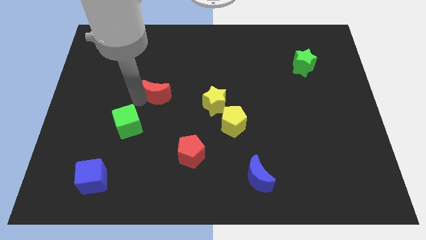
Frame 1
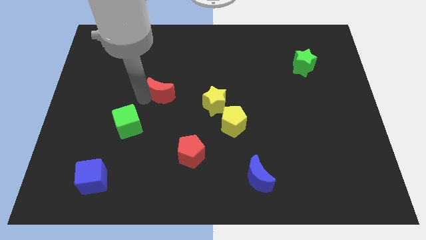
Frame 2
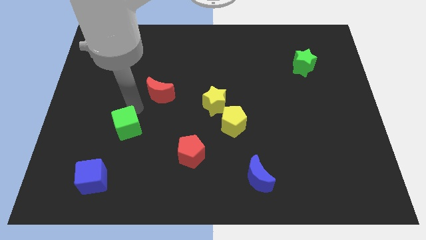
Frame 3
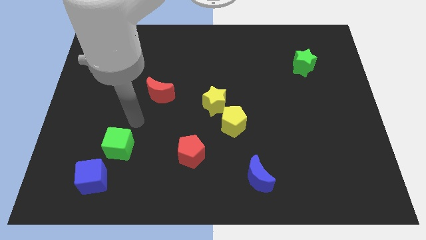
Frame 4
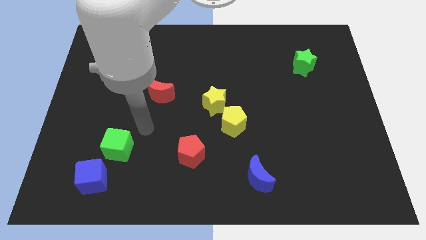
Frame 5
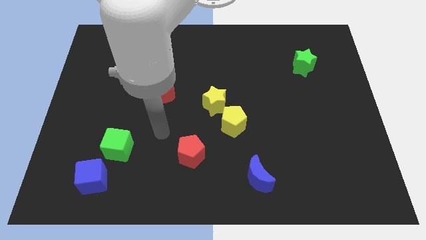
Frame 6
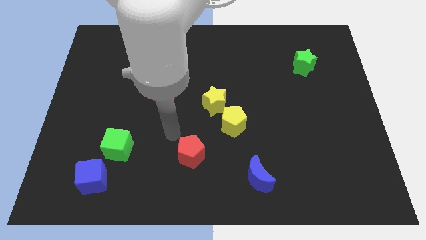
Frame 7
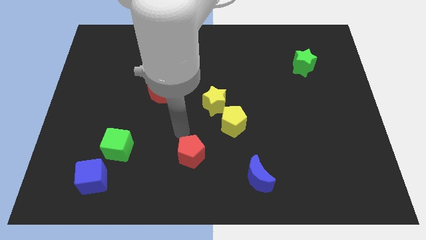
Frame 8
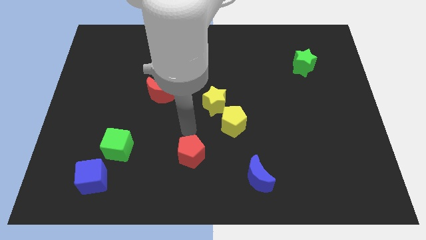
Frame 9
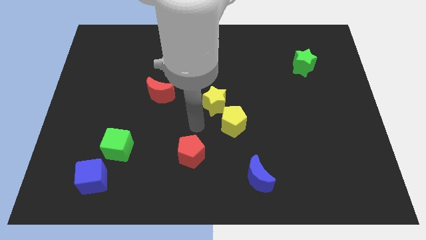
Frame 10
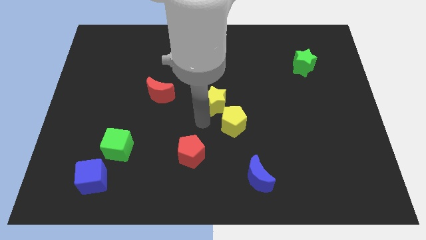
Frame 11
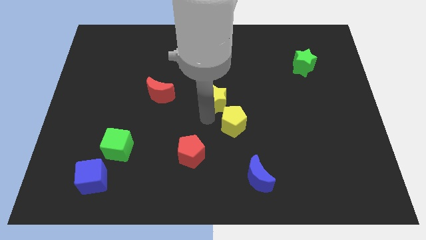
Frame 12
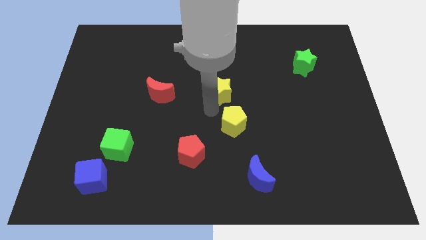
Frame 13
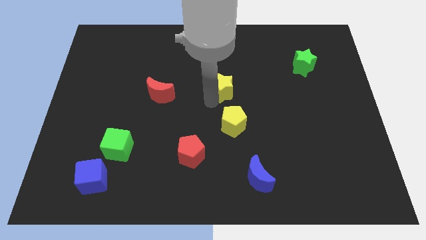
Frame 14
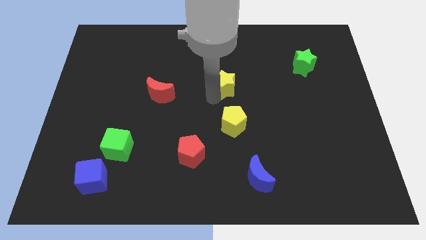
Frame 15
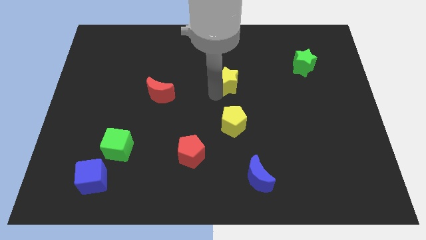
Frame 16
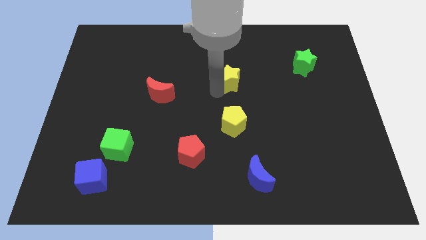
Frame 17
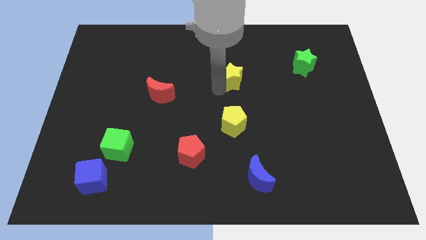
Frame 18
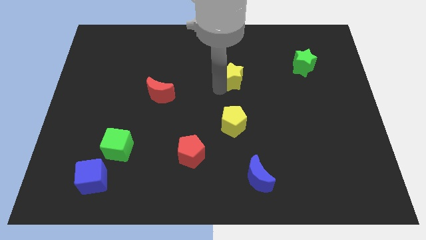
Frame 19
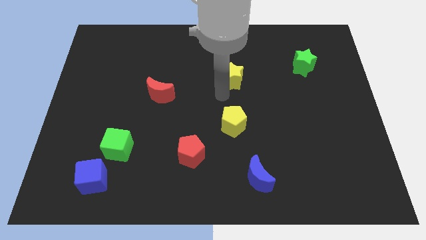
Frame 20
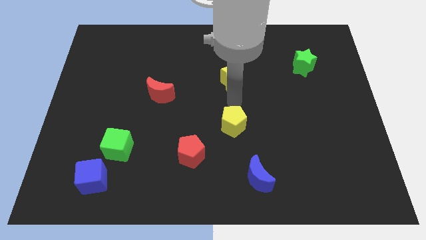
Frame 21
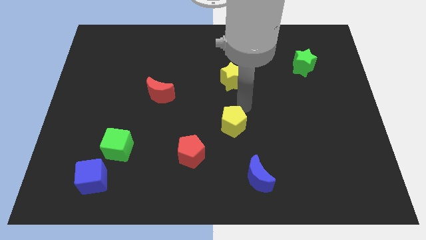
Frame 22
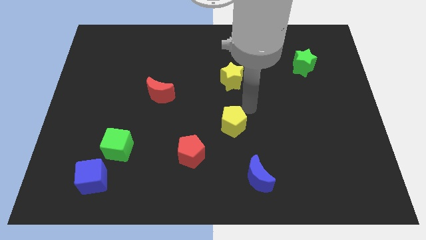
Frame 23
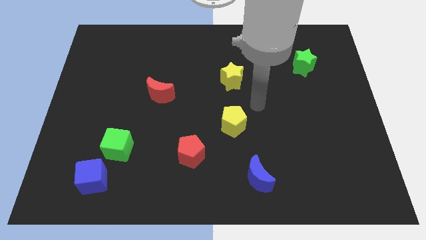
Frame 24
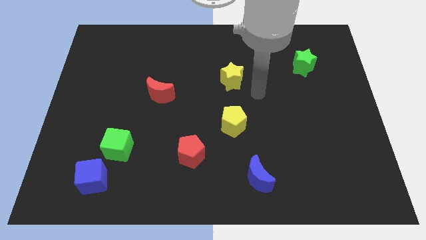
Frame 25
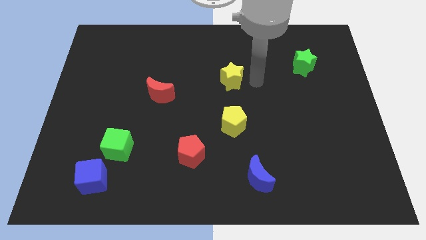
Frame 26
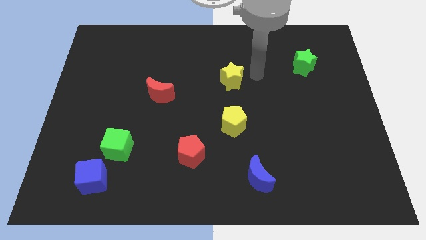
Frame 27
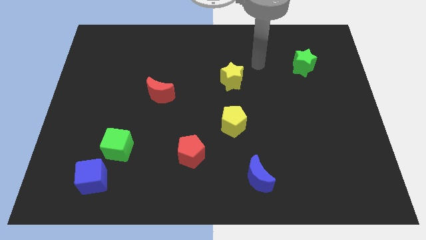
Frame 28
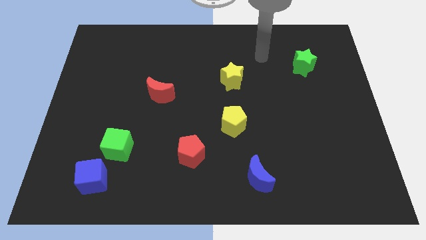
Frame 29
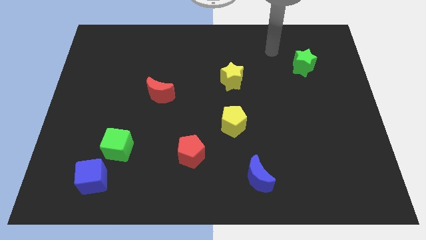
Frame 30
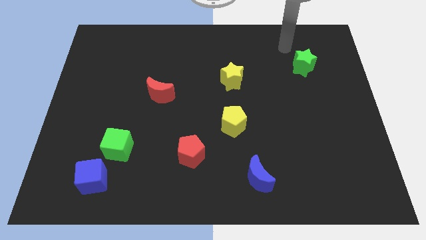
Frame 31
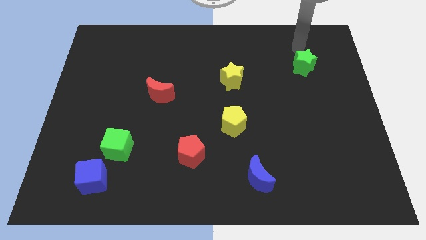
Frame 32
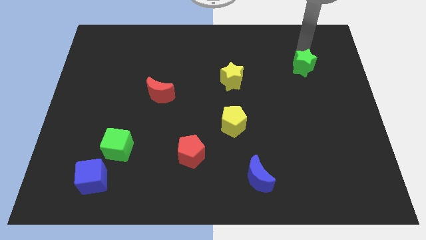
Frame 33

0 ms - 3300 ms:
push the yellow star away from the yellow pentagon

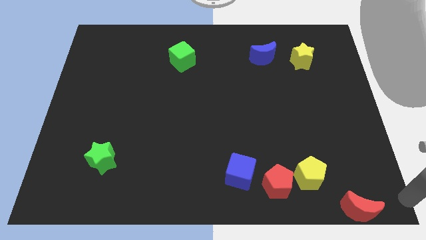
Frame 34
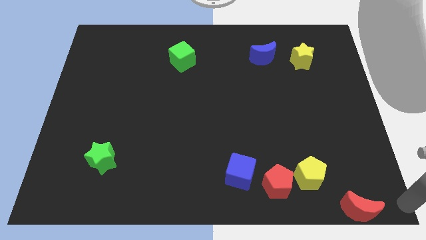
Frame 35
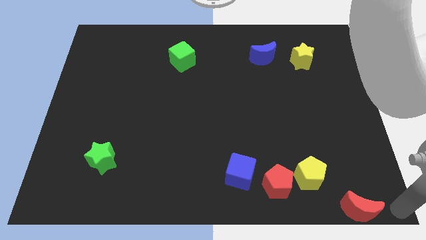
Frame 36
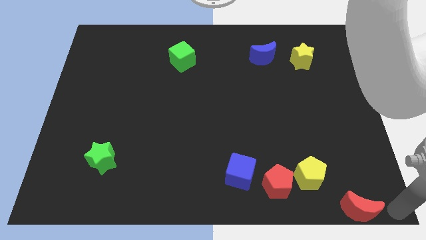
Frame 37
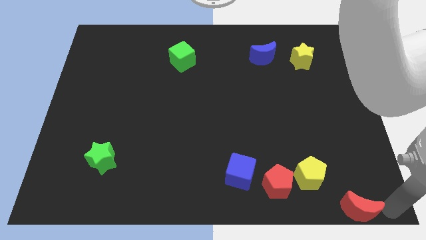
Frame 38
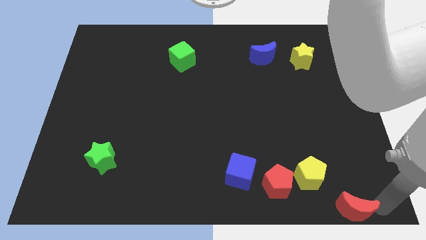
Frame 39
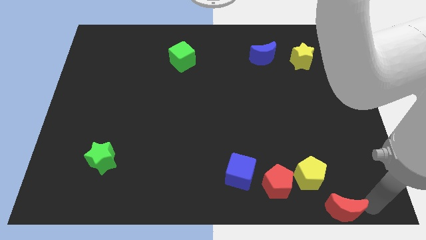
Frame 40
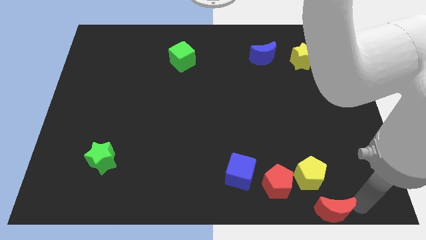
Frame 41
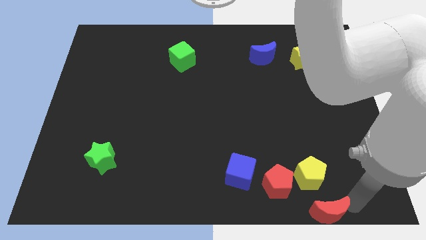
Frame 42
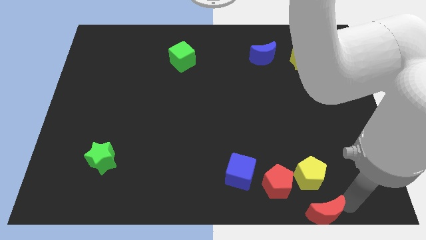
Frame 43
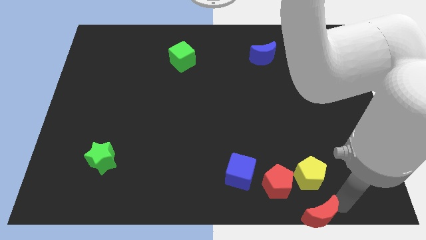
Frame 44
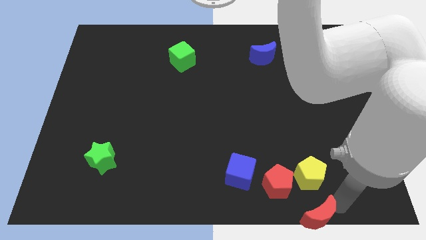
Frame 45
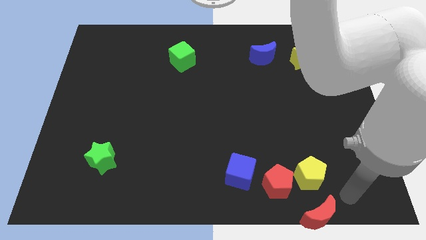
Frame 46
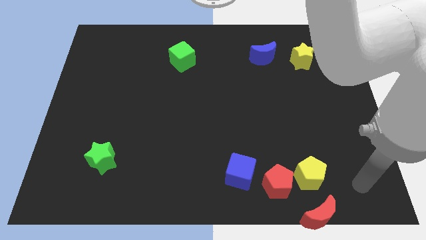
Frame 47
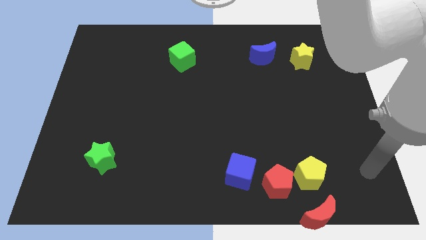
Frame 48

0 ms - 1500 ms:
move the red crescent underneath the yellow pentagon

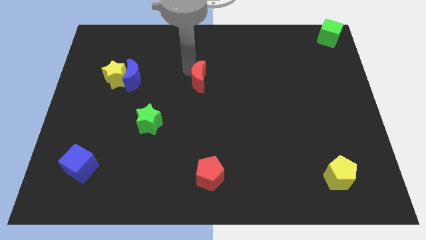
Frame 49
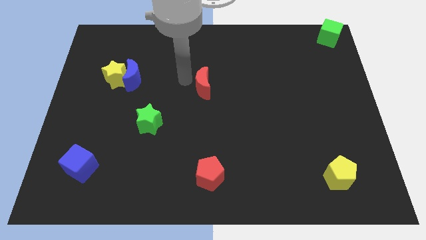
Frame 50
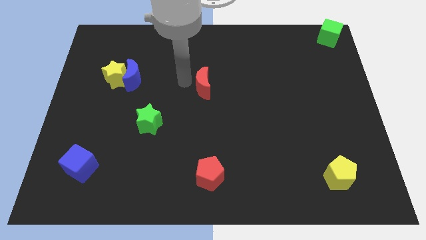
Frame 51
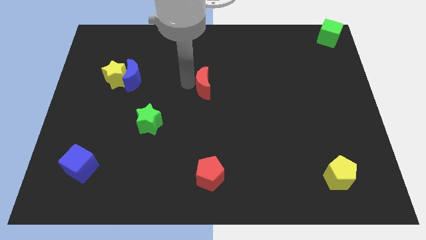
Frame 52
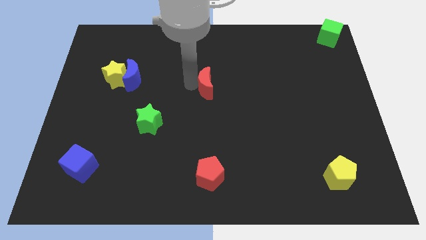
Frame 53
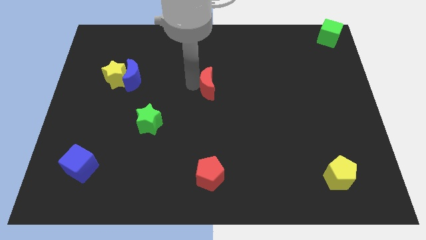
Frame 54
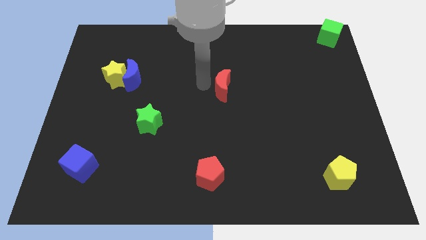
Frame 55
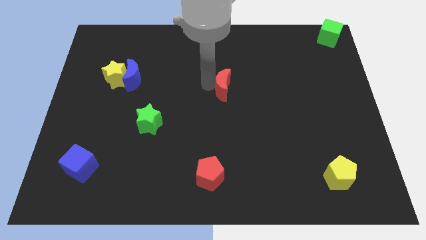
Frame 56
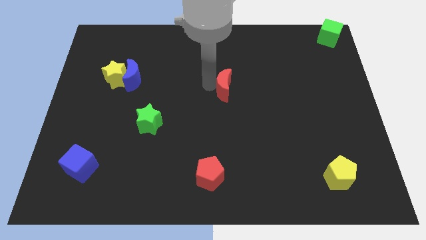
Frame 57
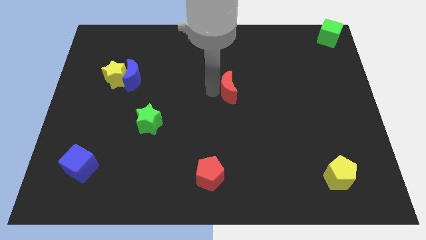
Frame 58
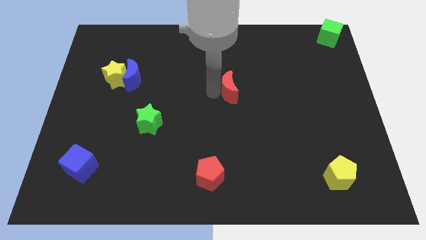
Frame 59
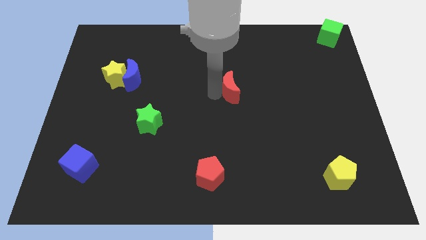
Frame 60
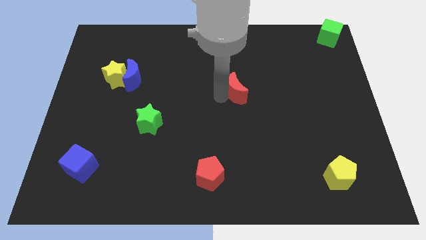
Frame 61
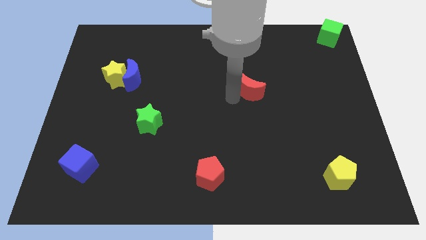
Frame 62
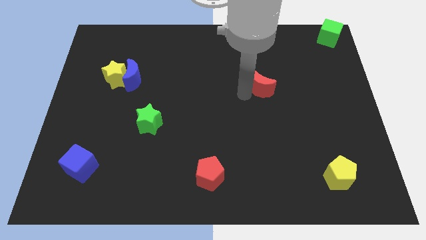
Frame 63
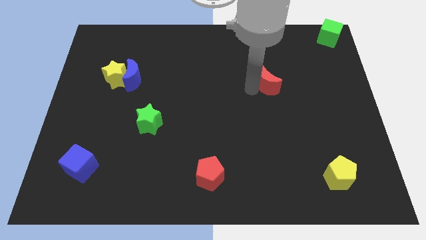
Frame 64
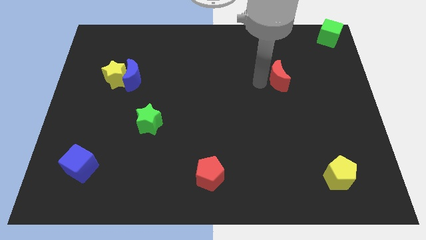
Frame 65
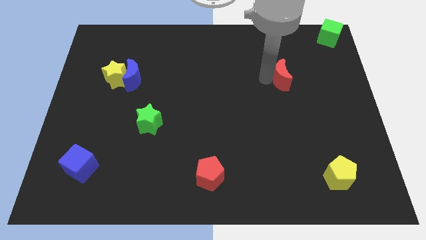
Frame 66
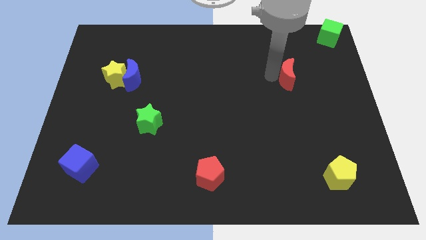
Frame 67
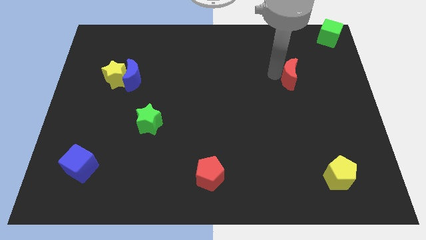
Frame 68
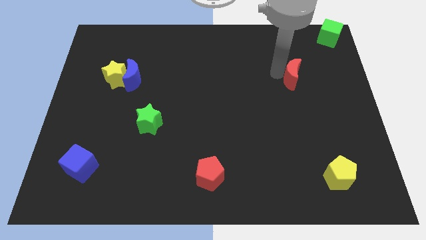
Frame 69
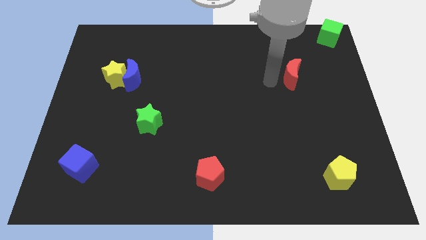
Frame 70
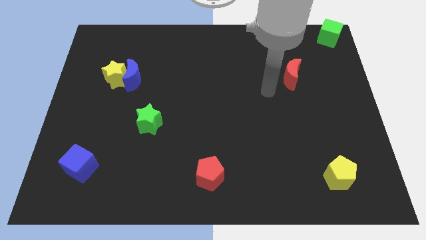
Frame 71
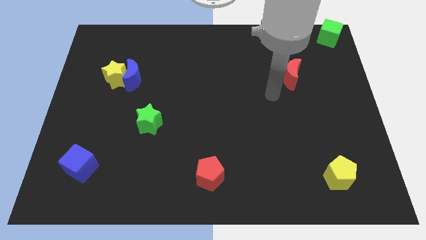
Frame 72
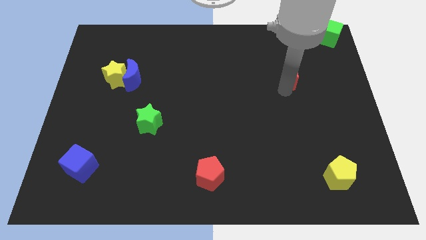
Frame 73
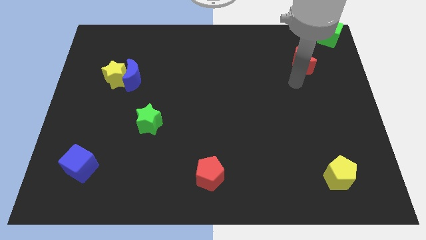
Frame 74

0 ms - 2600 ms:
push the red moon towards the green cube

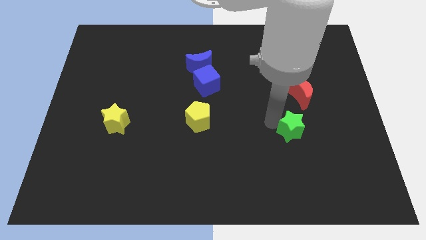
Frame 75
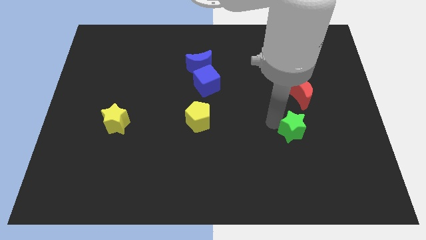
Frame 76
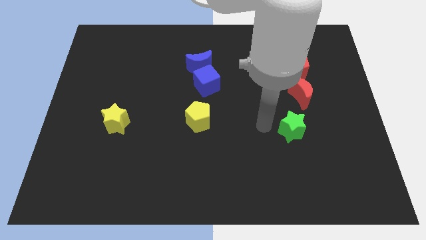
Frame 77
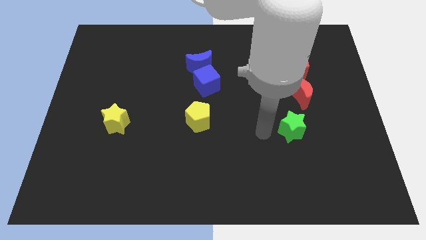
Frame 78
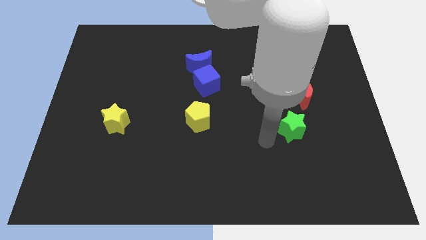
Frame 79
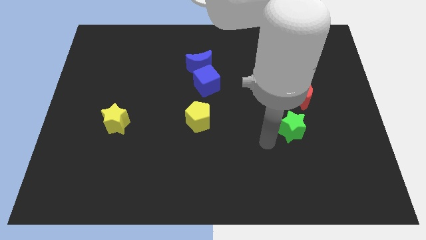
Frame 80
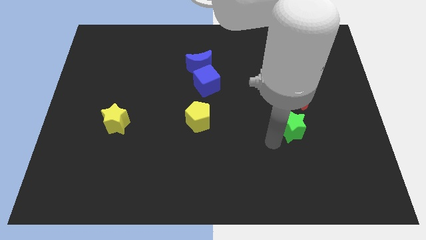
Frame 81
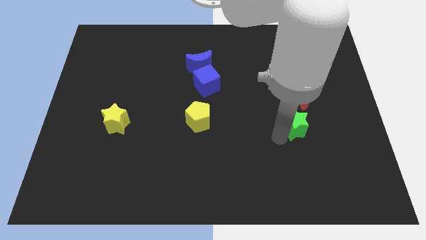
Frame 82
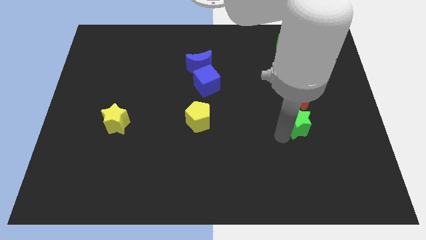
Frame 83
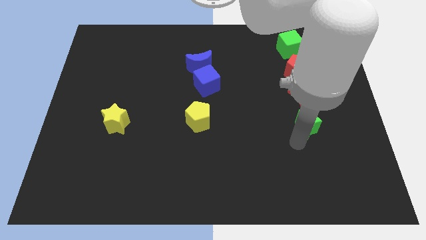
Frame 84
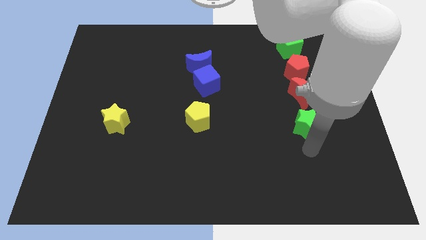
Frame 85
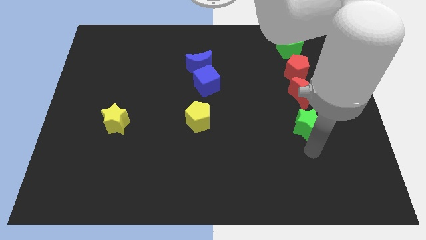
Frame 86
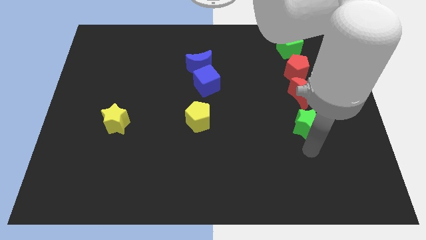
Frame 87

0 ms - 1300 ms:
drag the green star below the red moon

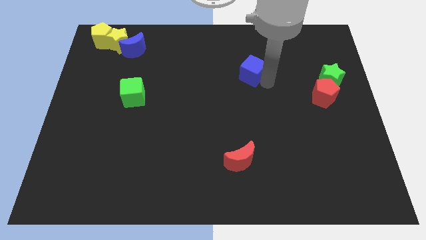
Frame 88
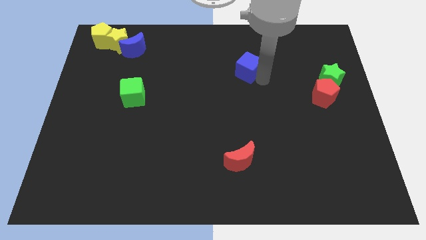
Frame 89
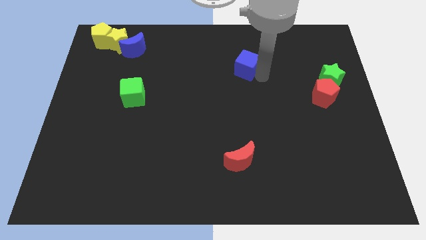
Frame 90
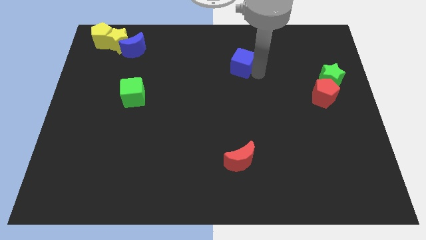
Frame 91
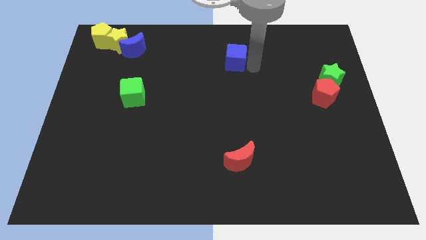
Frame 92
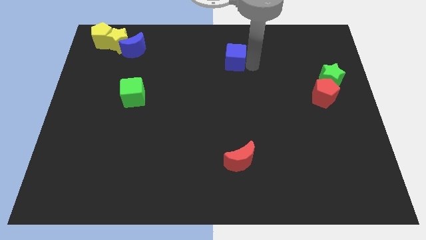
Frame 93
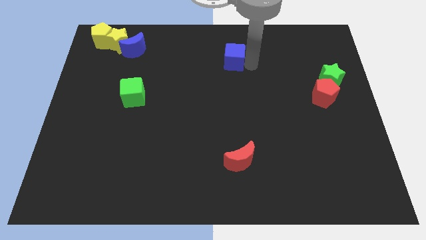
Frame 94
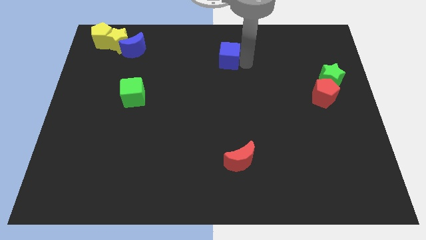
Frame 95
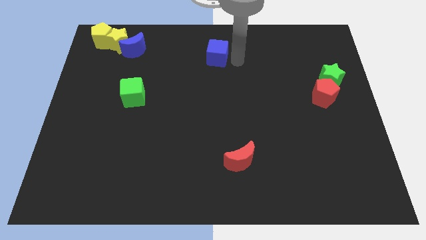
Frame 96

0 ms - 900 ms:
move blue cube to the center top
